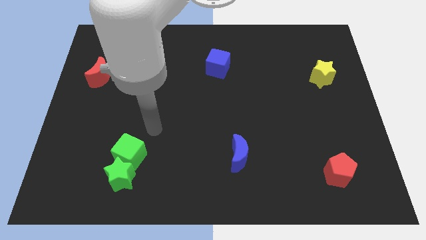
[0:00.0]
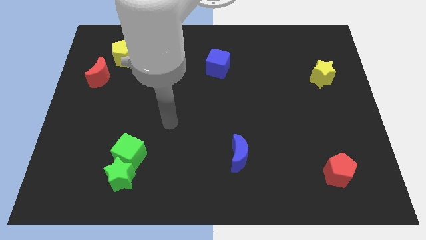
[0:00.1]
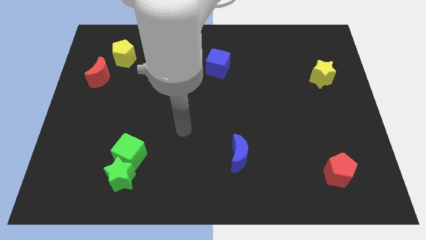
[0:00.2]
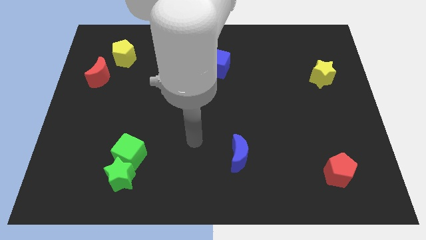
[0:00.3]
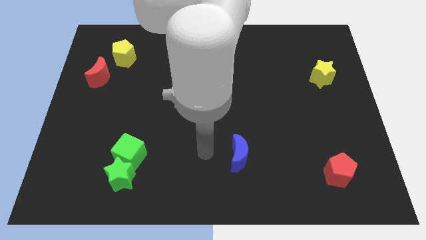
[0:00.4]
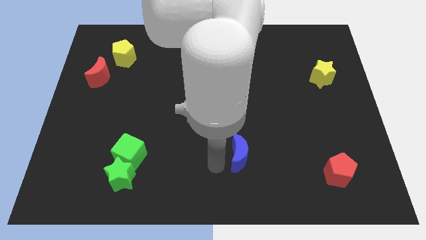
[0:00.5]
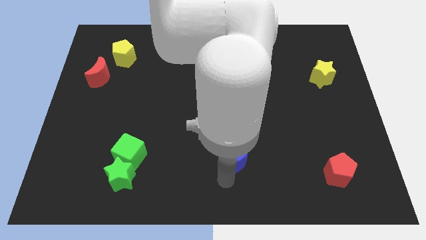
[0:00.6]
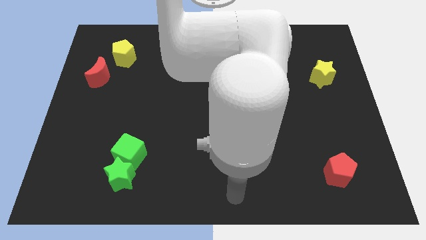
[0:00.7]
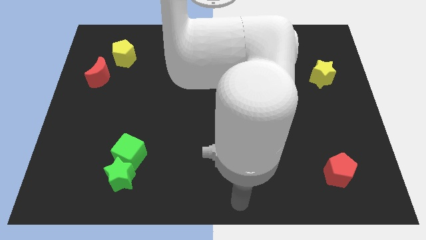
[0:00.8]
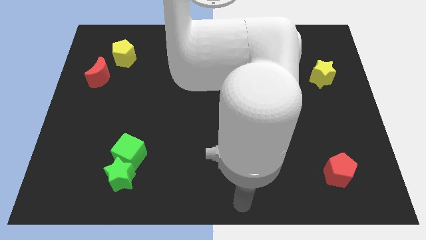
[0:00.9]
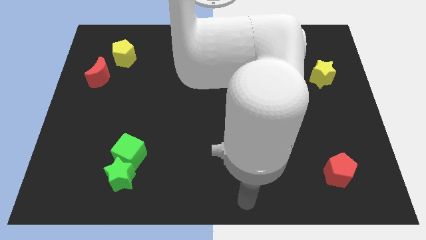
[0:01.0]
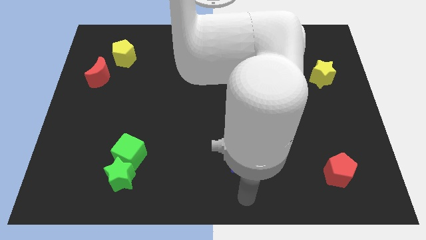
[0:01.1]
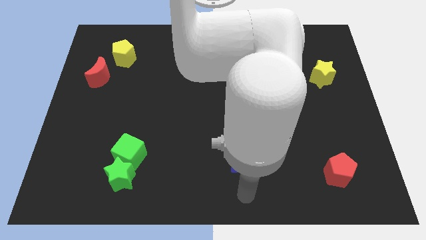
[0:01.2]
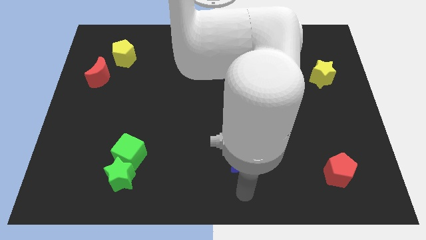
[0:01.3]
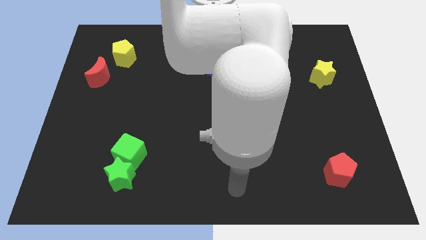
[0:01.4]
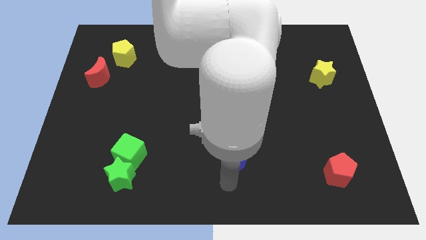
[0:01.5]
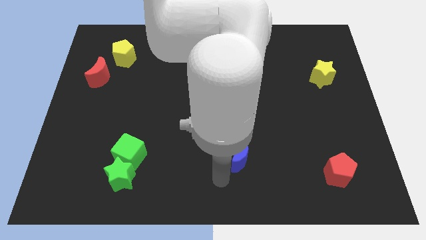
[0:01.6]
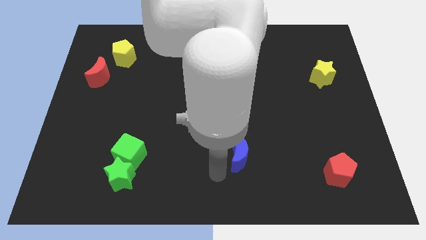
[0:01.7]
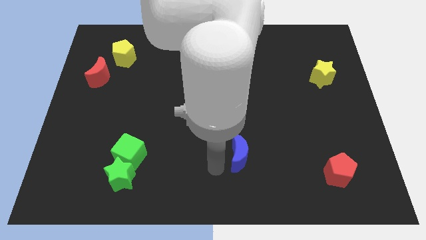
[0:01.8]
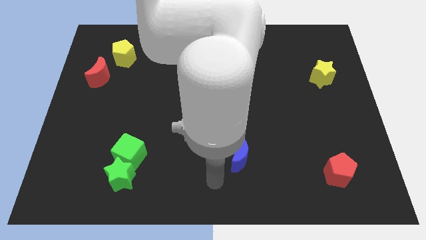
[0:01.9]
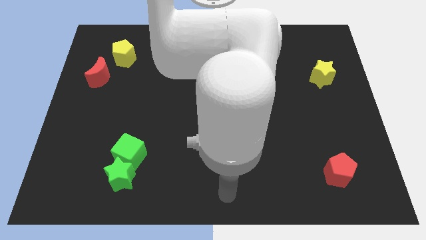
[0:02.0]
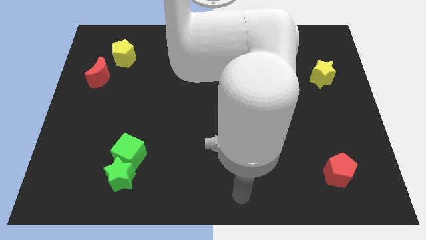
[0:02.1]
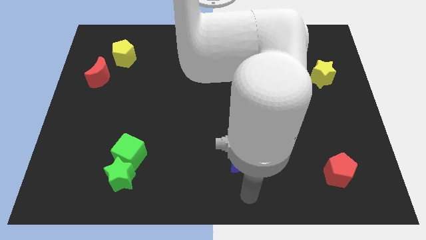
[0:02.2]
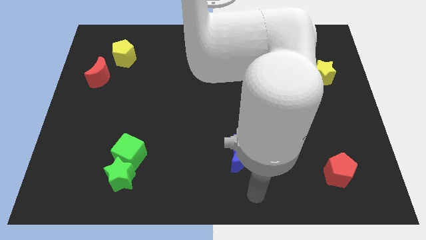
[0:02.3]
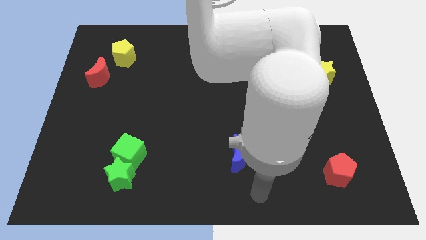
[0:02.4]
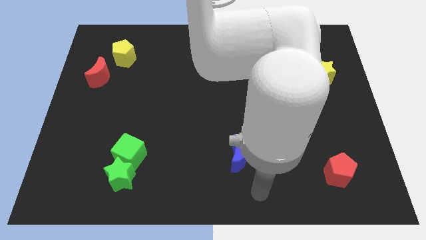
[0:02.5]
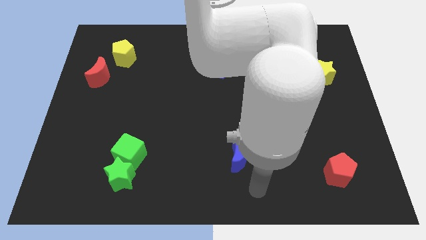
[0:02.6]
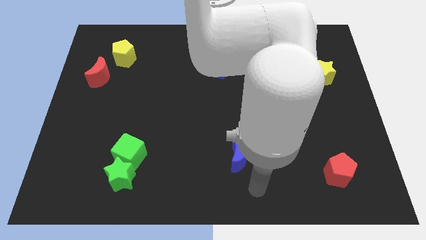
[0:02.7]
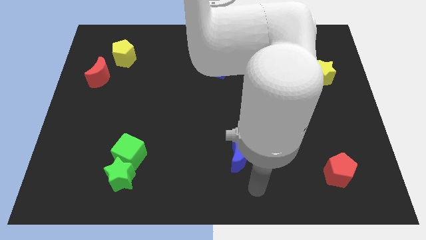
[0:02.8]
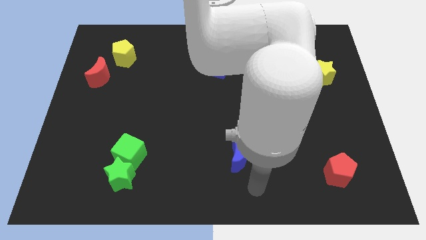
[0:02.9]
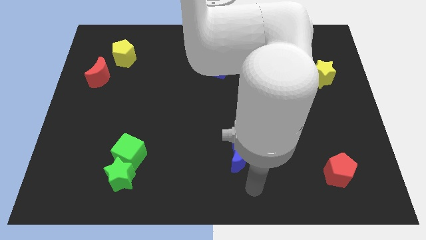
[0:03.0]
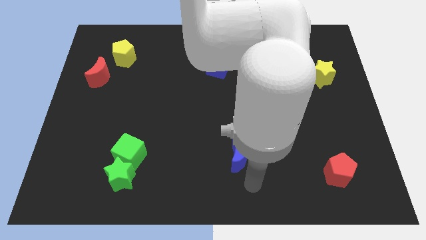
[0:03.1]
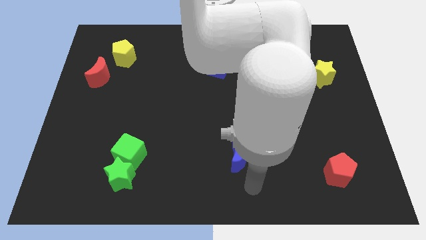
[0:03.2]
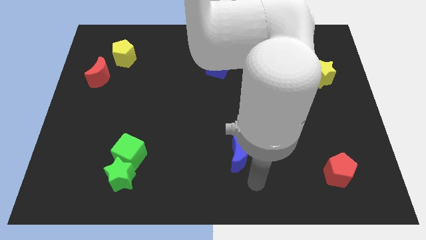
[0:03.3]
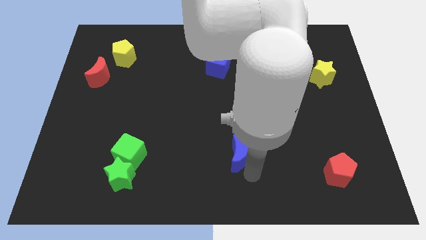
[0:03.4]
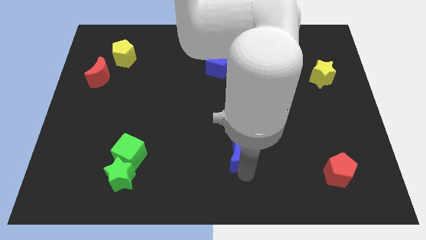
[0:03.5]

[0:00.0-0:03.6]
place your arm to the bottom of blue moon

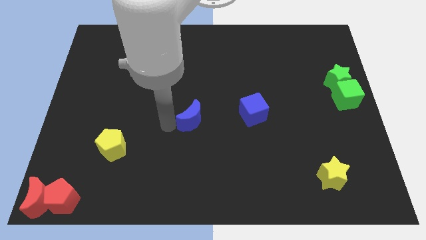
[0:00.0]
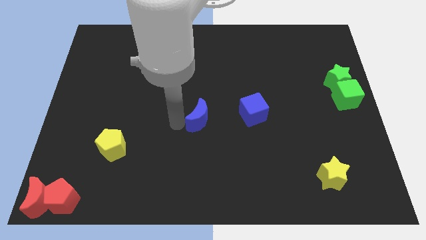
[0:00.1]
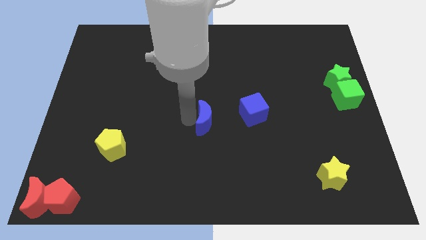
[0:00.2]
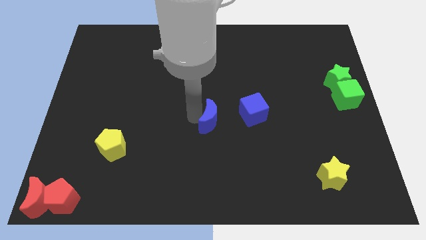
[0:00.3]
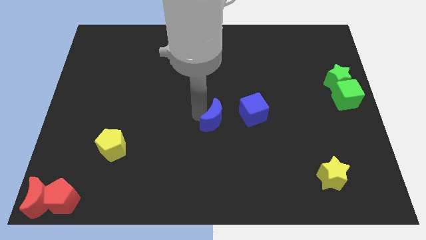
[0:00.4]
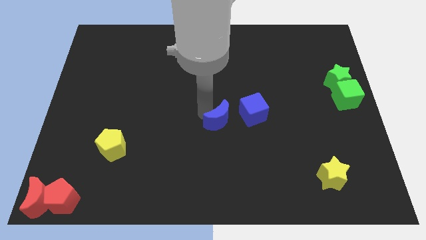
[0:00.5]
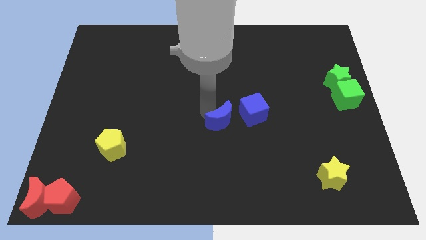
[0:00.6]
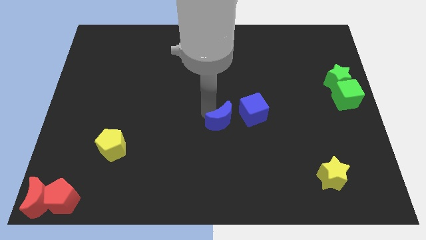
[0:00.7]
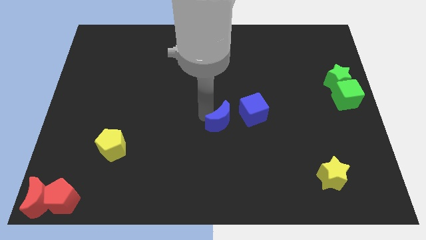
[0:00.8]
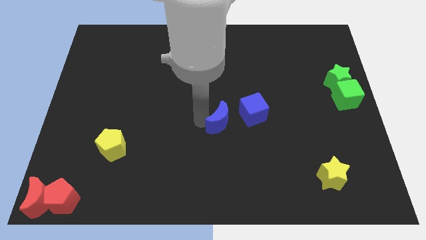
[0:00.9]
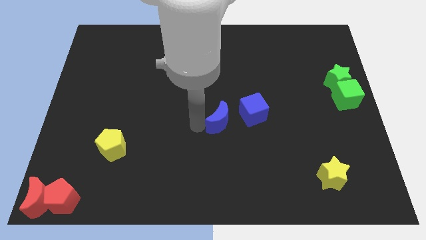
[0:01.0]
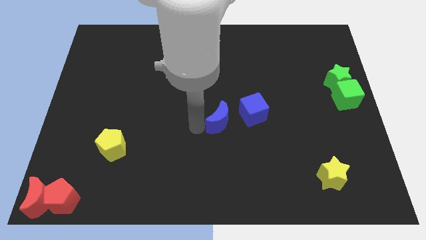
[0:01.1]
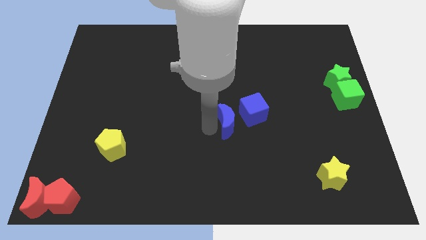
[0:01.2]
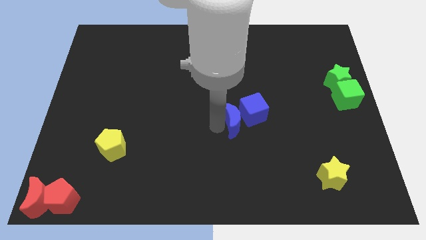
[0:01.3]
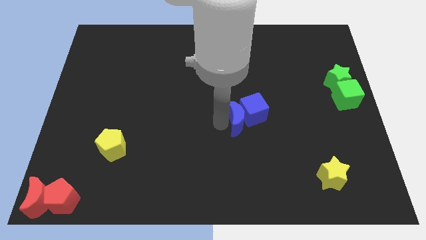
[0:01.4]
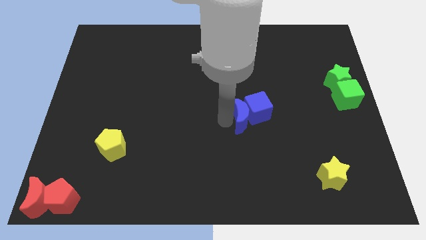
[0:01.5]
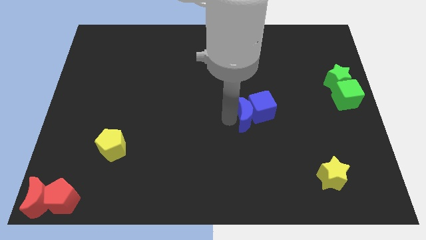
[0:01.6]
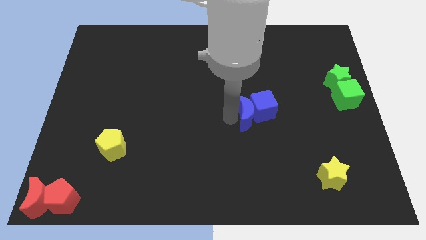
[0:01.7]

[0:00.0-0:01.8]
drag the blue moon into the blue cube

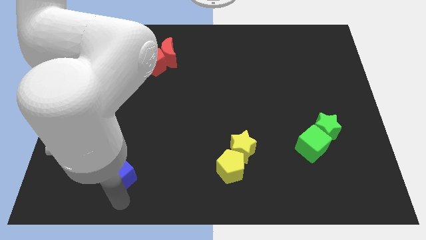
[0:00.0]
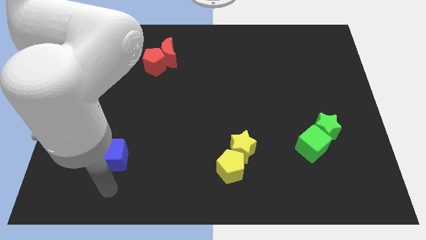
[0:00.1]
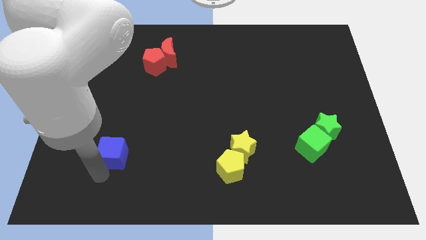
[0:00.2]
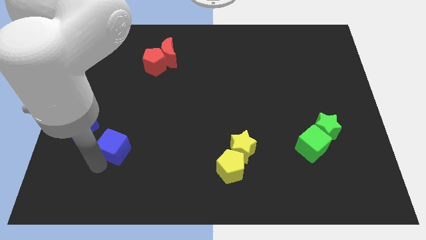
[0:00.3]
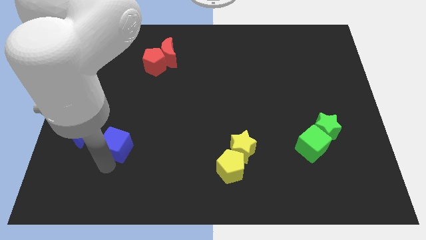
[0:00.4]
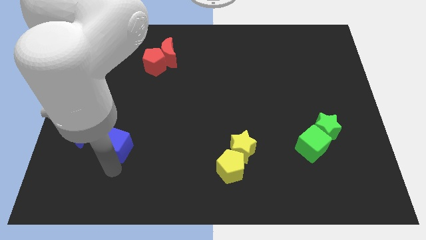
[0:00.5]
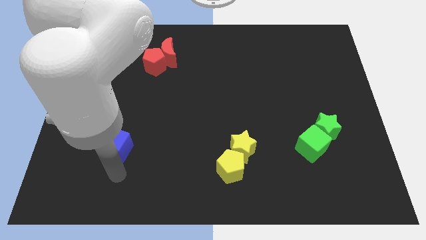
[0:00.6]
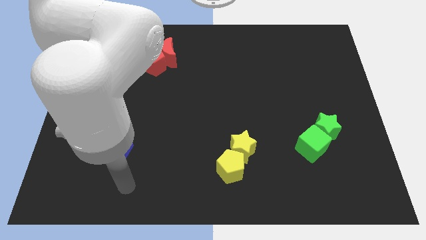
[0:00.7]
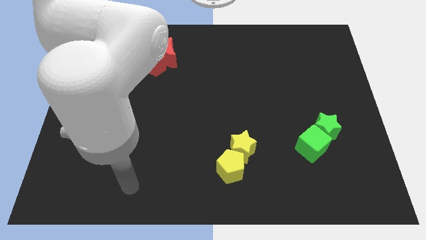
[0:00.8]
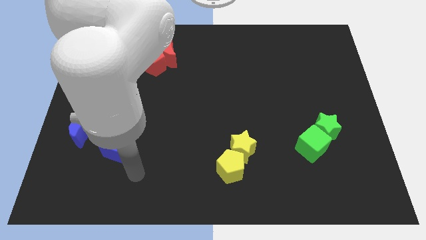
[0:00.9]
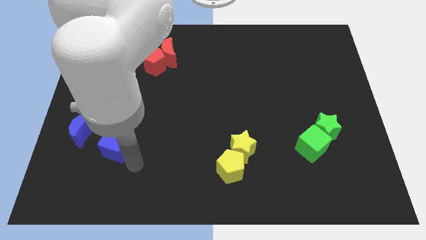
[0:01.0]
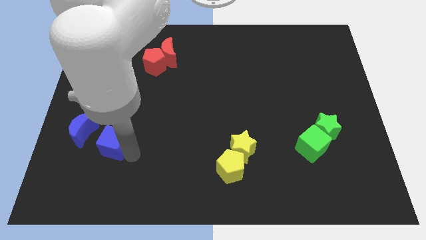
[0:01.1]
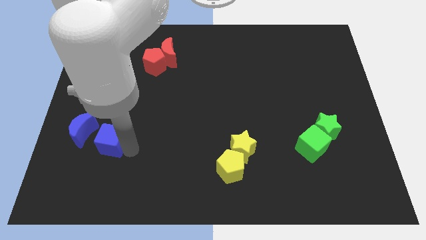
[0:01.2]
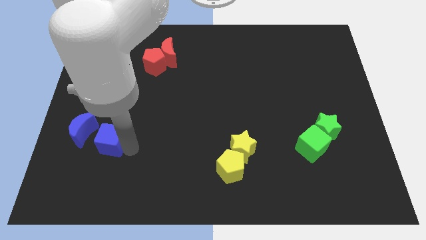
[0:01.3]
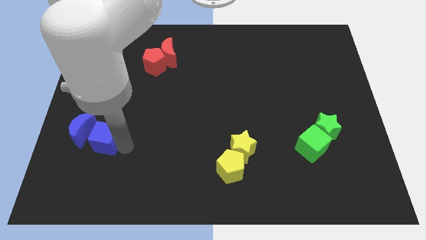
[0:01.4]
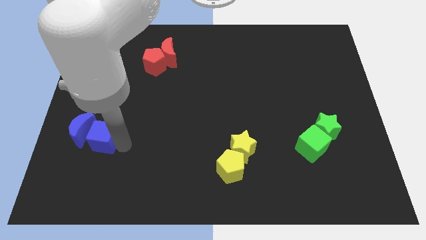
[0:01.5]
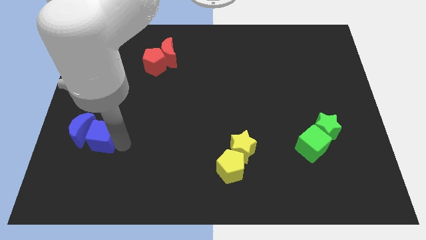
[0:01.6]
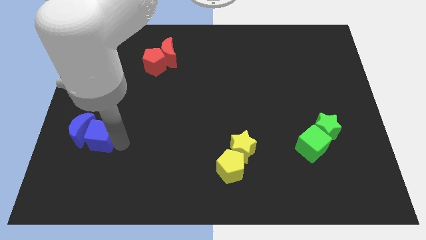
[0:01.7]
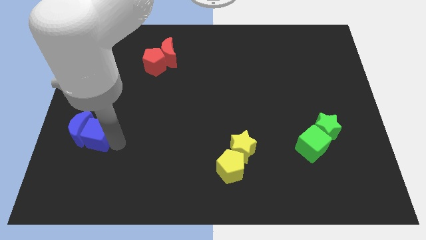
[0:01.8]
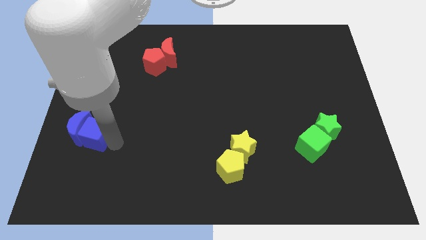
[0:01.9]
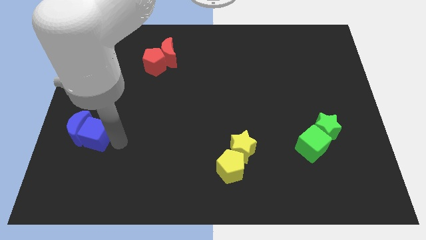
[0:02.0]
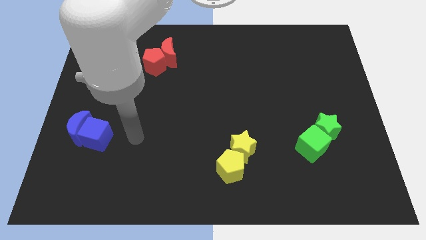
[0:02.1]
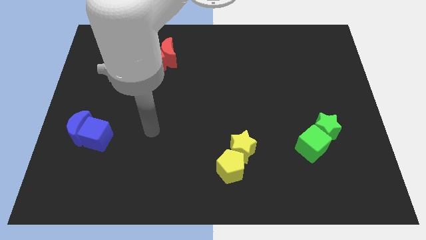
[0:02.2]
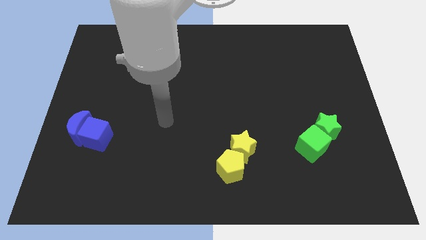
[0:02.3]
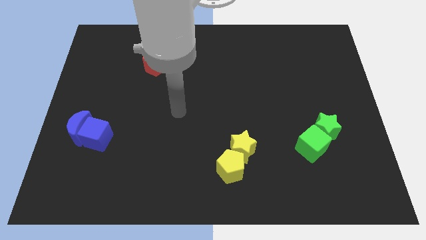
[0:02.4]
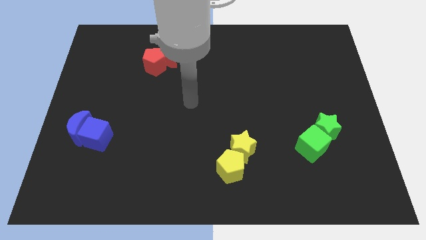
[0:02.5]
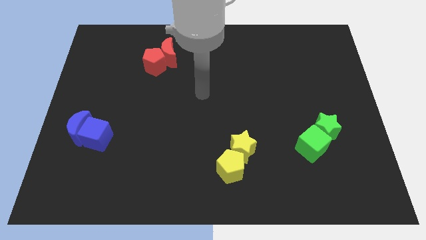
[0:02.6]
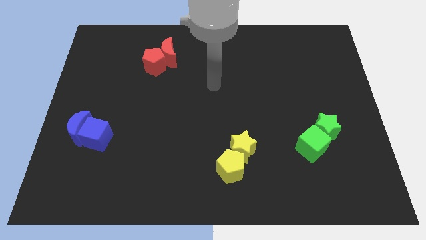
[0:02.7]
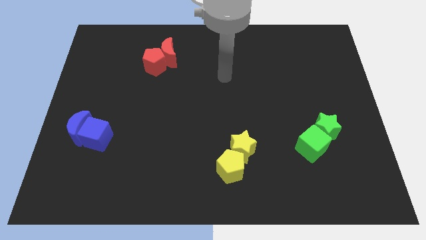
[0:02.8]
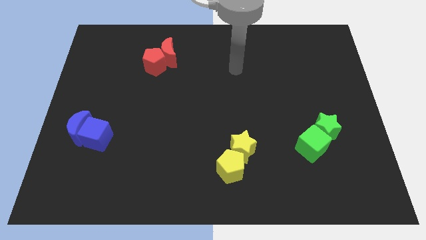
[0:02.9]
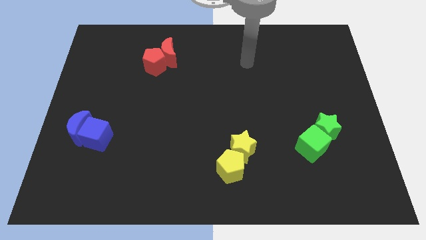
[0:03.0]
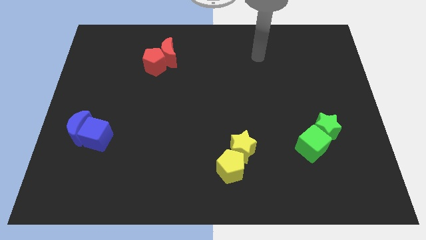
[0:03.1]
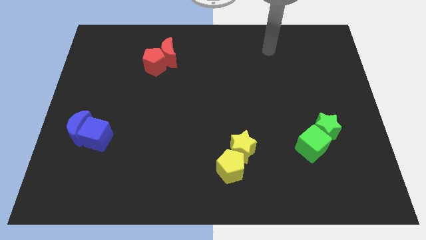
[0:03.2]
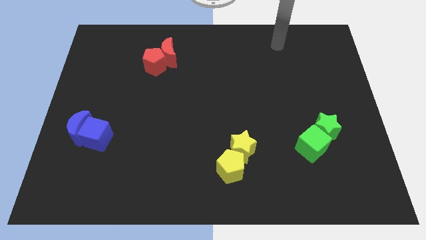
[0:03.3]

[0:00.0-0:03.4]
push blue cube close to the blue crescent

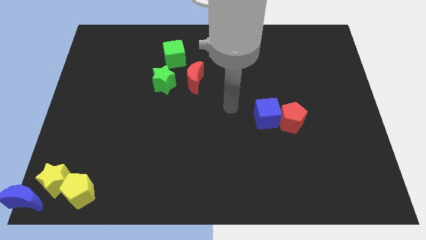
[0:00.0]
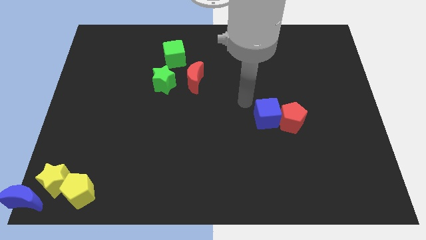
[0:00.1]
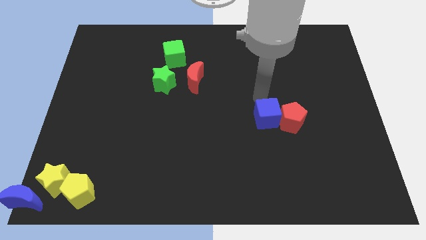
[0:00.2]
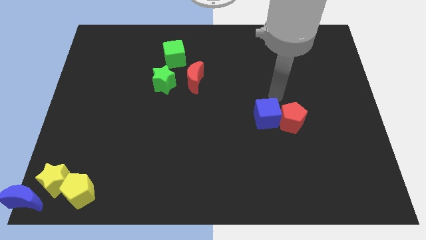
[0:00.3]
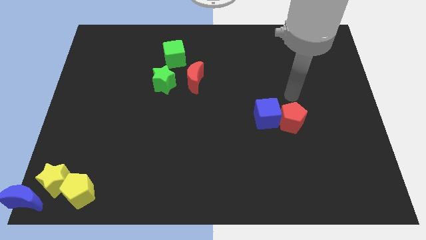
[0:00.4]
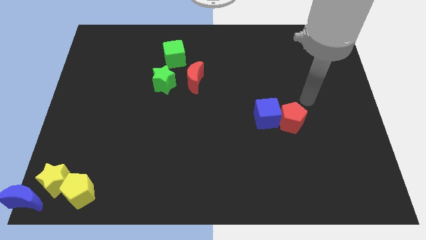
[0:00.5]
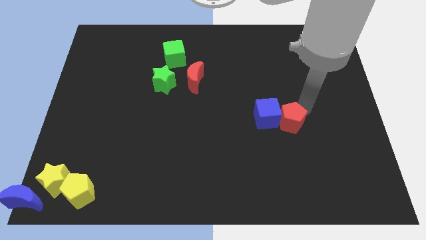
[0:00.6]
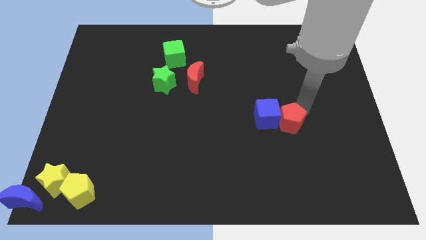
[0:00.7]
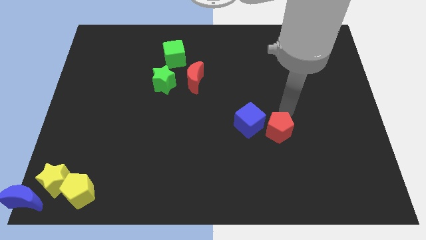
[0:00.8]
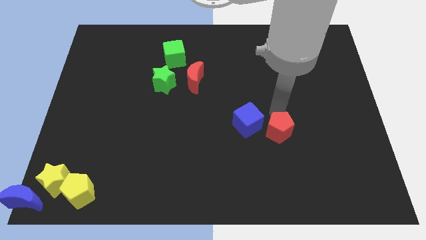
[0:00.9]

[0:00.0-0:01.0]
move blue cube and red pentagon slightly down
